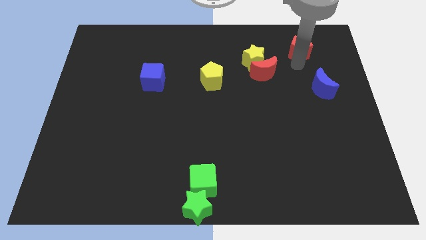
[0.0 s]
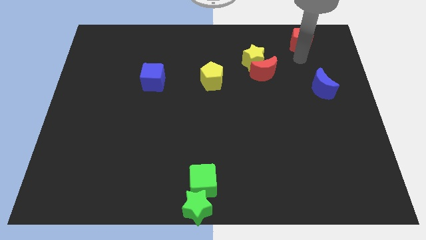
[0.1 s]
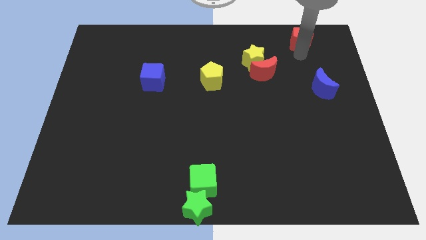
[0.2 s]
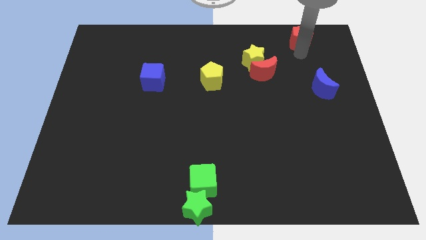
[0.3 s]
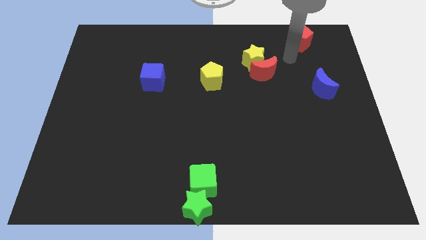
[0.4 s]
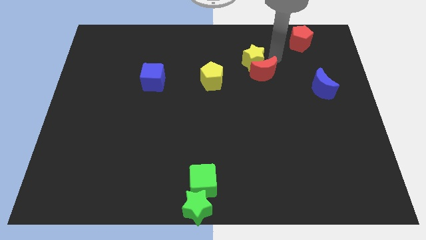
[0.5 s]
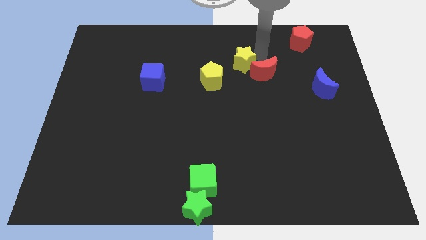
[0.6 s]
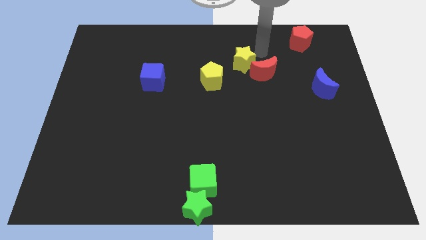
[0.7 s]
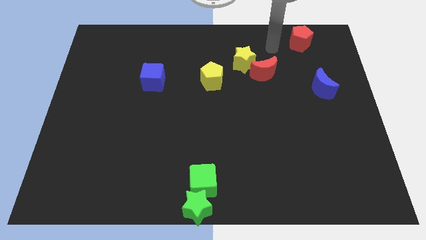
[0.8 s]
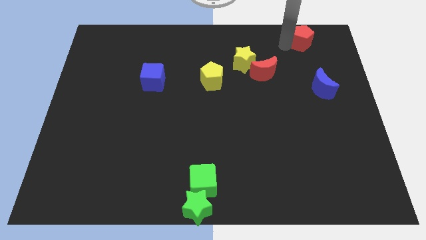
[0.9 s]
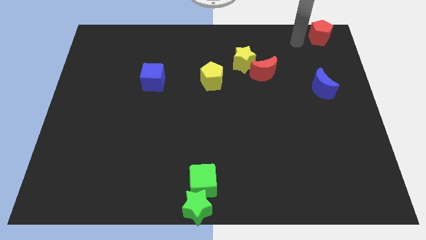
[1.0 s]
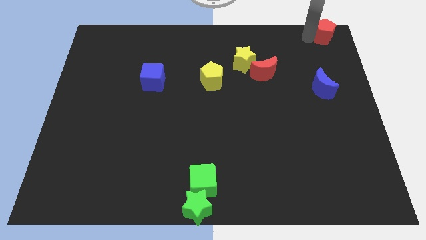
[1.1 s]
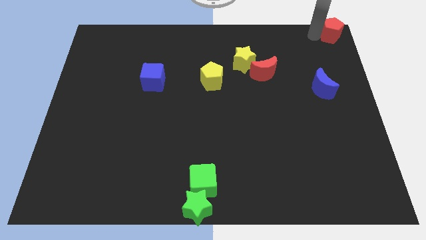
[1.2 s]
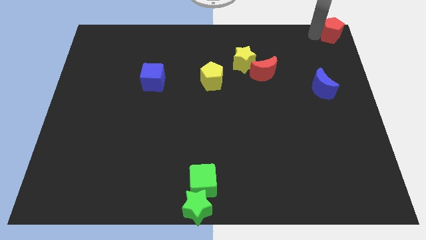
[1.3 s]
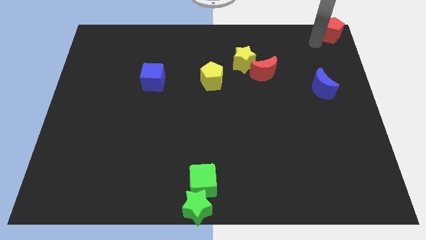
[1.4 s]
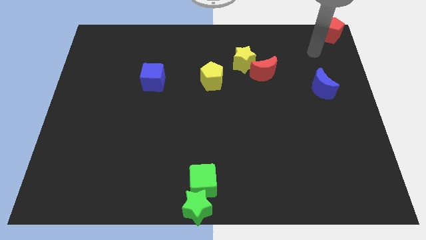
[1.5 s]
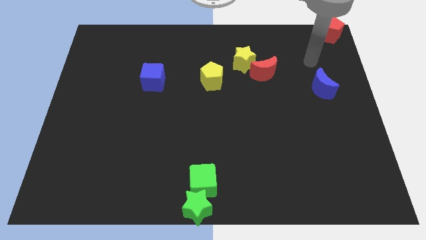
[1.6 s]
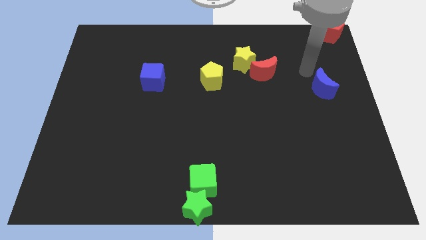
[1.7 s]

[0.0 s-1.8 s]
place the red pentagon at the top right corner of the board

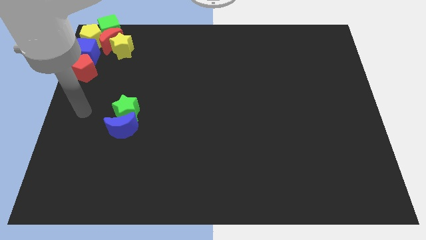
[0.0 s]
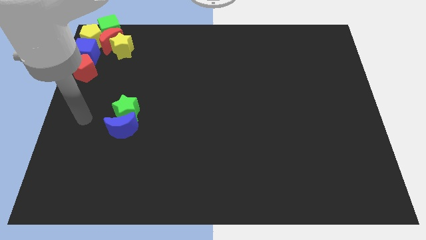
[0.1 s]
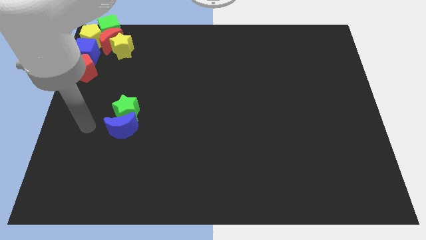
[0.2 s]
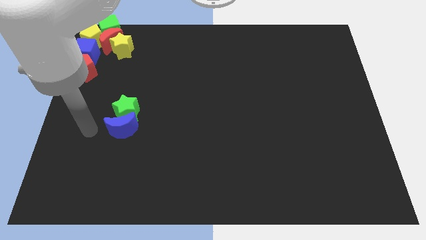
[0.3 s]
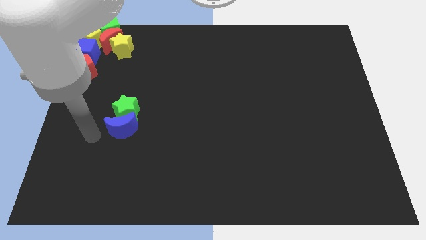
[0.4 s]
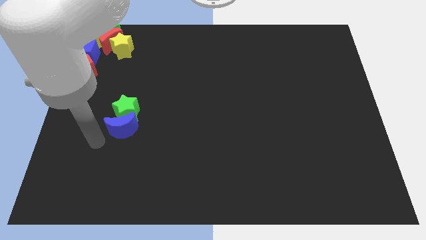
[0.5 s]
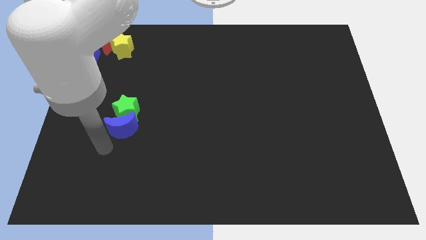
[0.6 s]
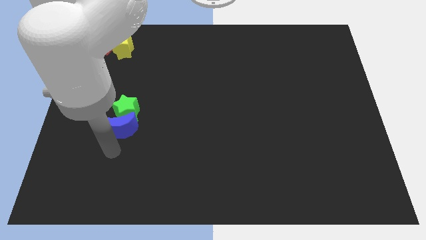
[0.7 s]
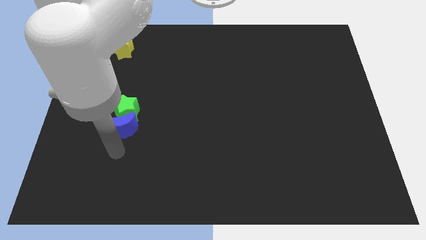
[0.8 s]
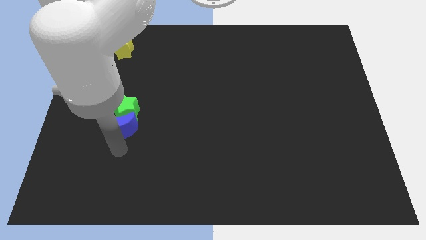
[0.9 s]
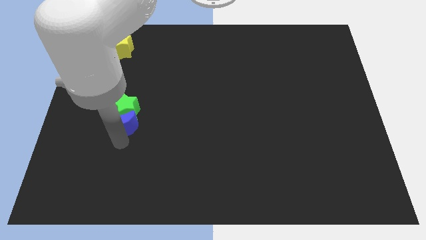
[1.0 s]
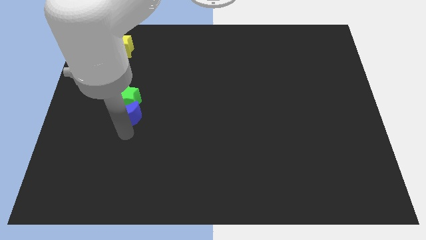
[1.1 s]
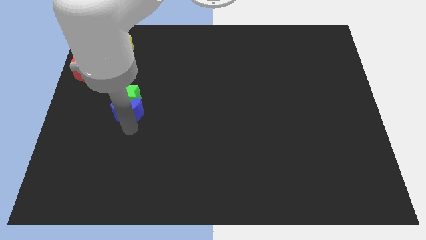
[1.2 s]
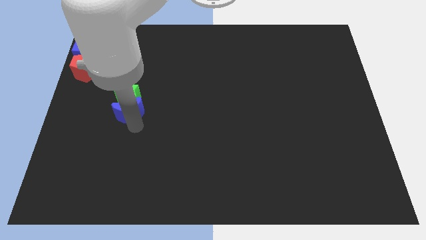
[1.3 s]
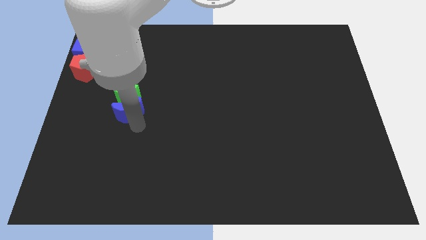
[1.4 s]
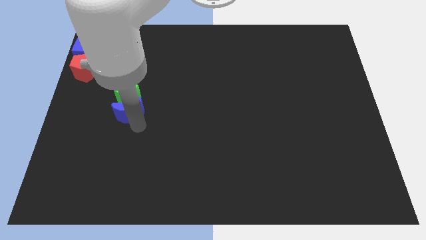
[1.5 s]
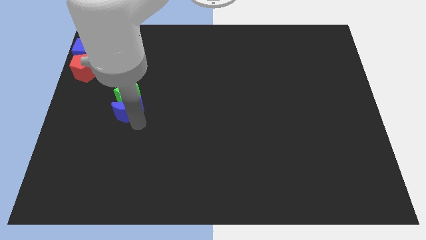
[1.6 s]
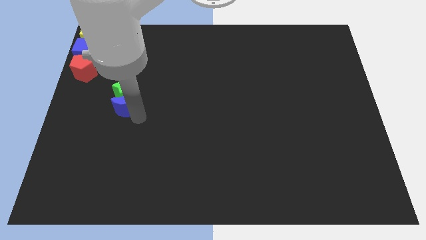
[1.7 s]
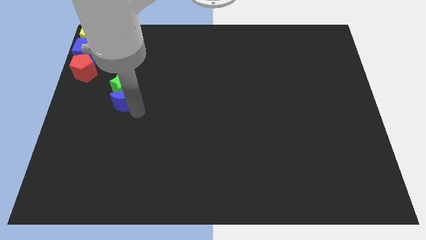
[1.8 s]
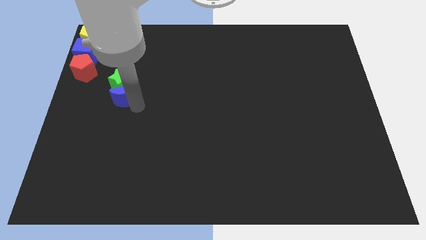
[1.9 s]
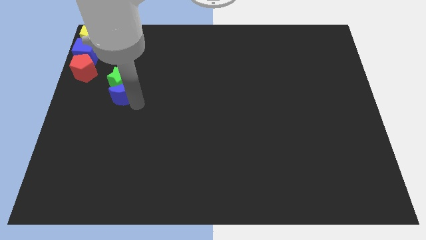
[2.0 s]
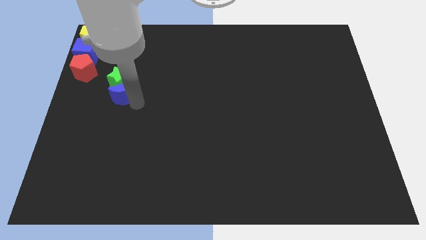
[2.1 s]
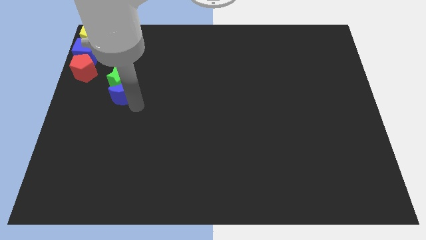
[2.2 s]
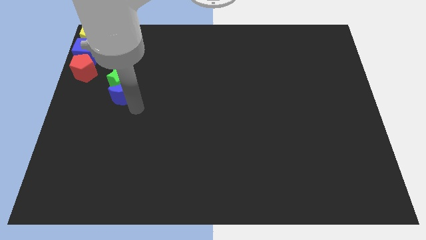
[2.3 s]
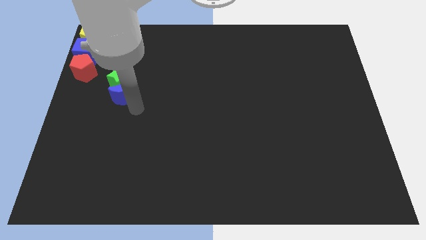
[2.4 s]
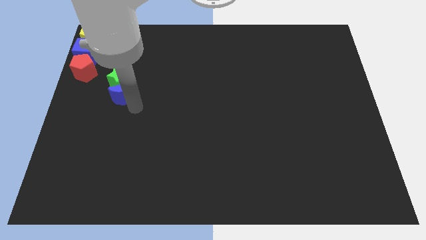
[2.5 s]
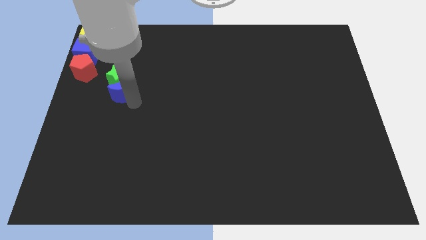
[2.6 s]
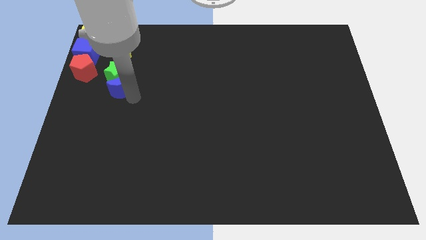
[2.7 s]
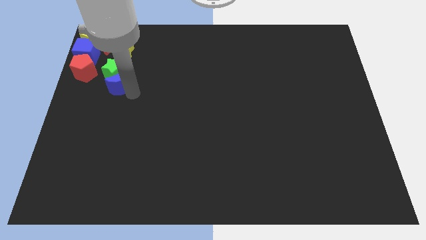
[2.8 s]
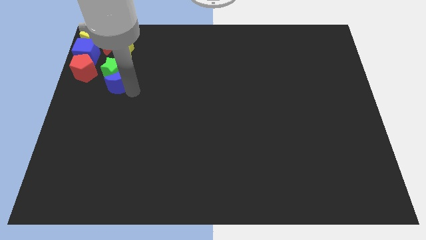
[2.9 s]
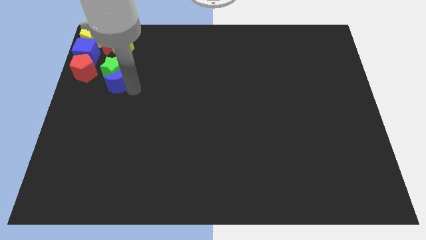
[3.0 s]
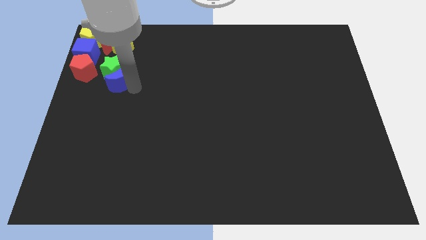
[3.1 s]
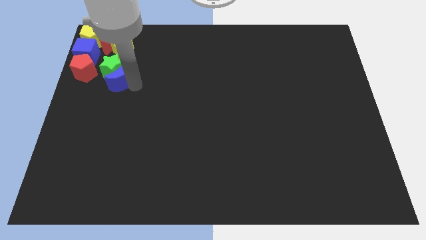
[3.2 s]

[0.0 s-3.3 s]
push the blue crescent into green star

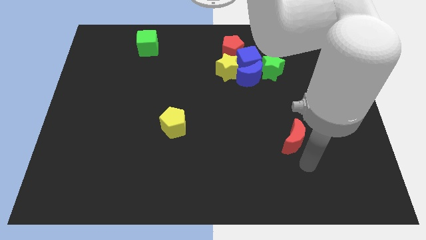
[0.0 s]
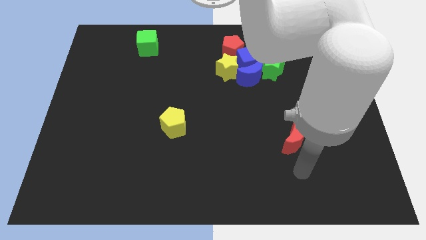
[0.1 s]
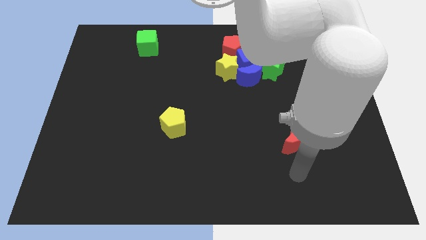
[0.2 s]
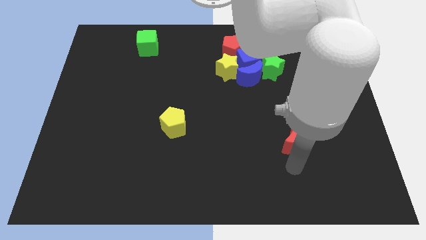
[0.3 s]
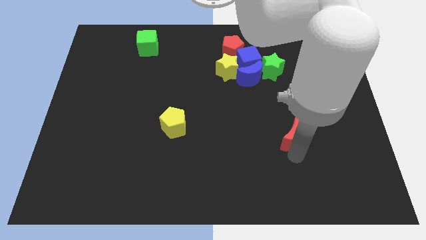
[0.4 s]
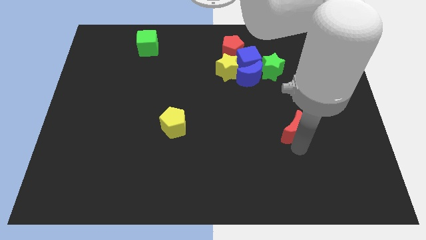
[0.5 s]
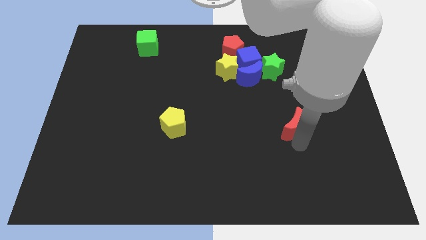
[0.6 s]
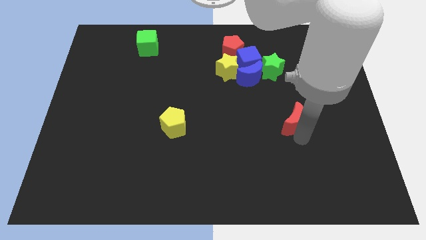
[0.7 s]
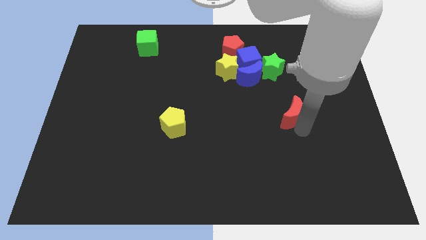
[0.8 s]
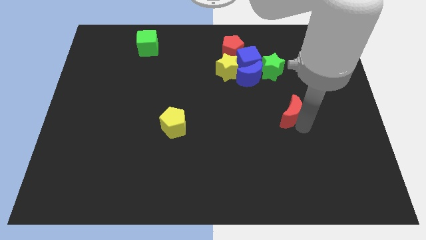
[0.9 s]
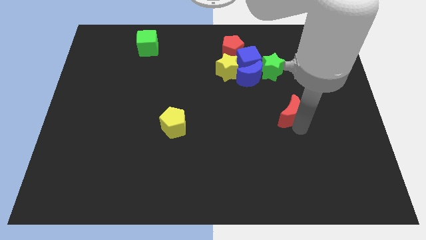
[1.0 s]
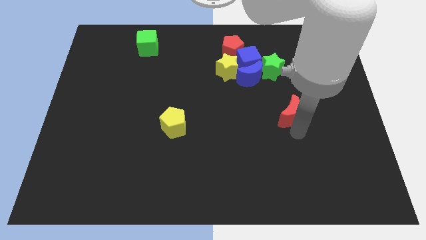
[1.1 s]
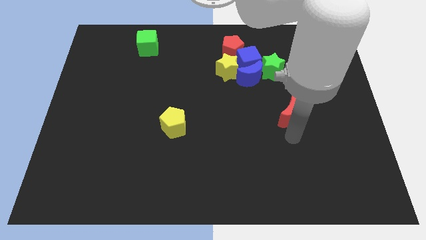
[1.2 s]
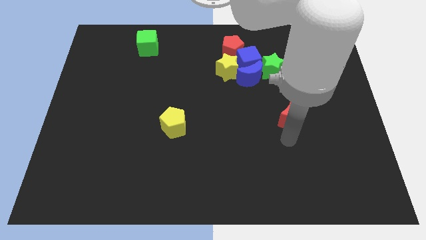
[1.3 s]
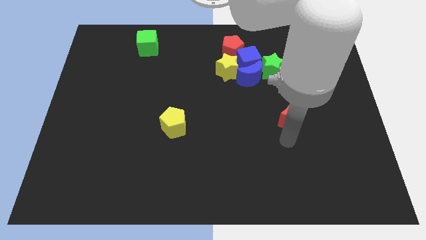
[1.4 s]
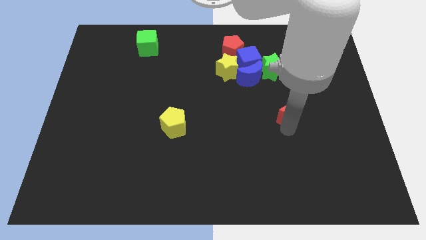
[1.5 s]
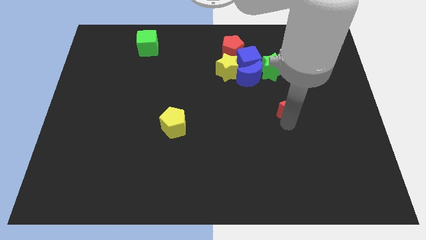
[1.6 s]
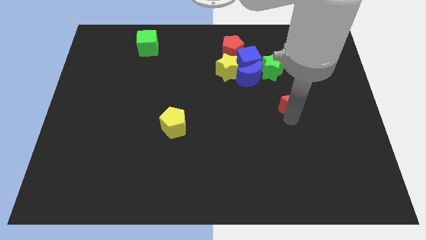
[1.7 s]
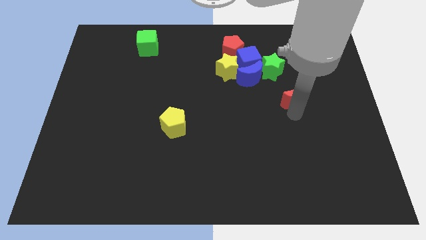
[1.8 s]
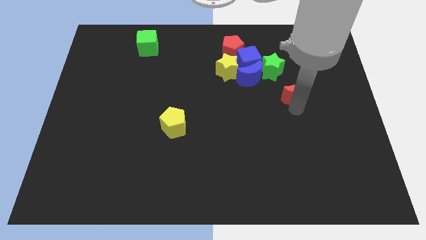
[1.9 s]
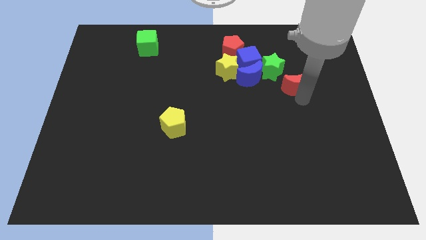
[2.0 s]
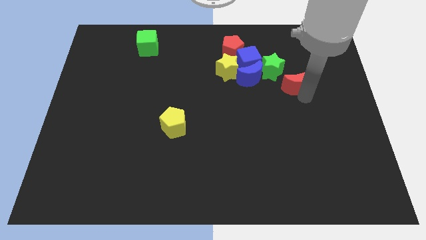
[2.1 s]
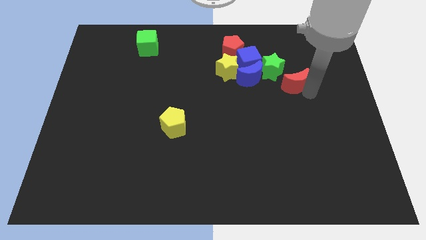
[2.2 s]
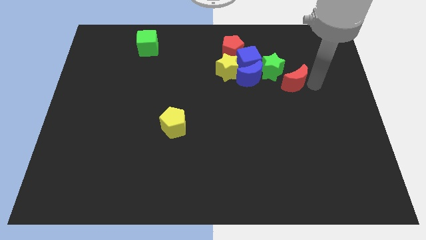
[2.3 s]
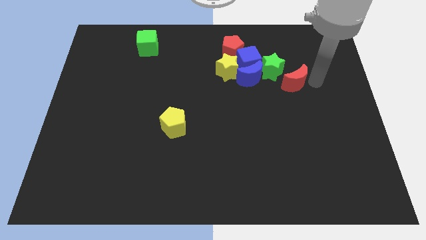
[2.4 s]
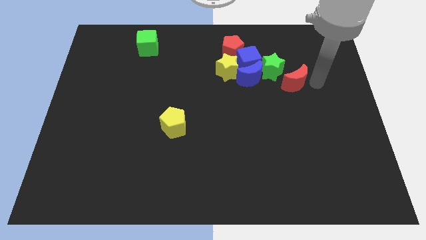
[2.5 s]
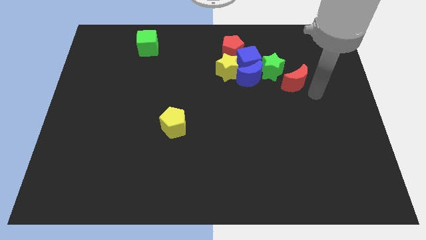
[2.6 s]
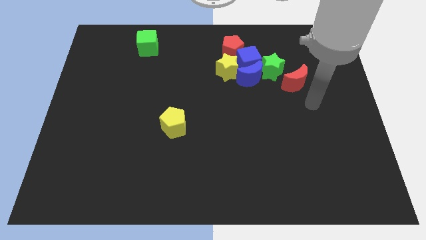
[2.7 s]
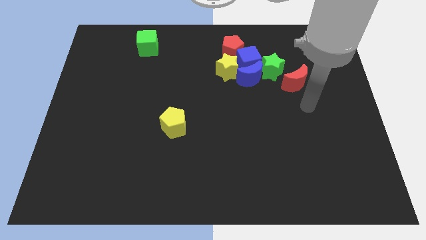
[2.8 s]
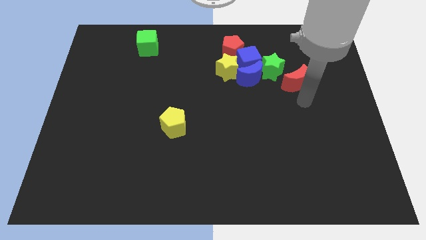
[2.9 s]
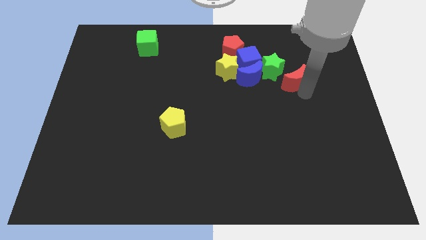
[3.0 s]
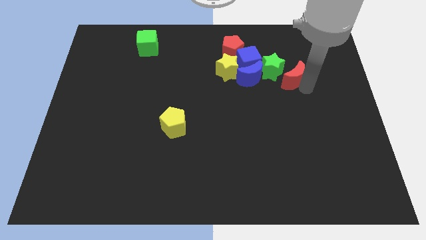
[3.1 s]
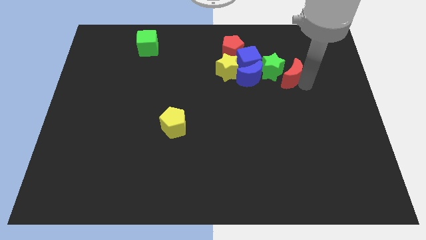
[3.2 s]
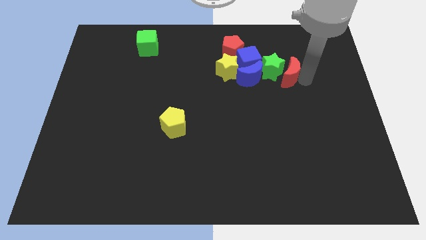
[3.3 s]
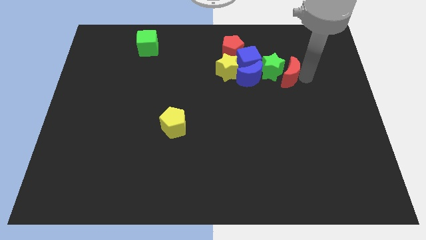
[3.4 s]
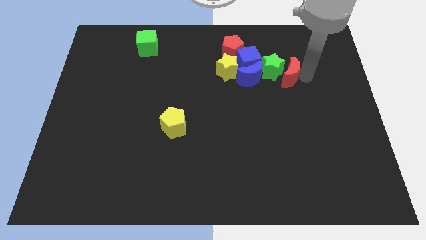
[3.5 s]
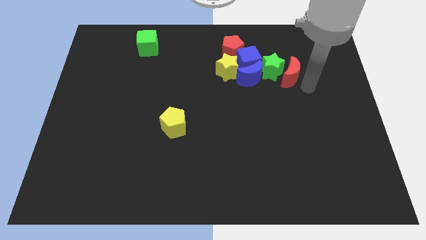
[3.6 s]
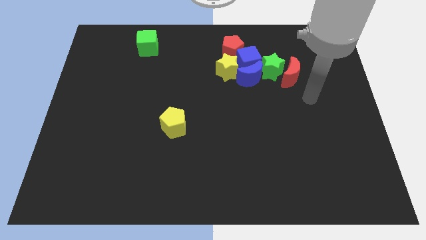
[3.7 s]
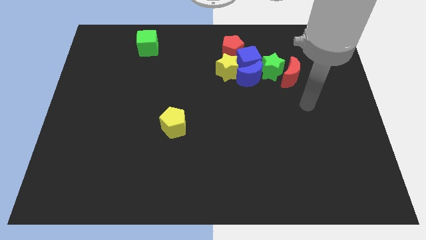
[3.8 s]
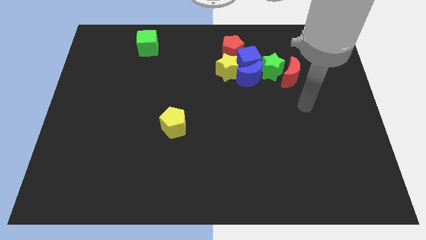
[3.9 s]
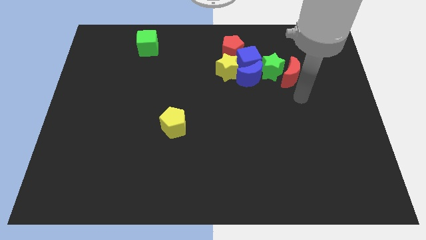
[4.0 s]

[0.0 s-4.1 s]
push red moon to the right of green star
